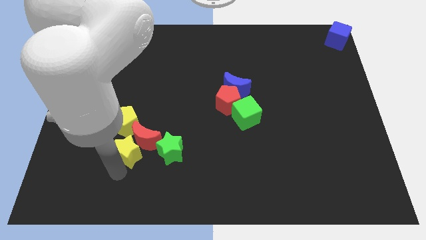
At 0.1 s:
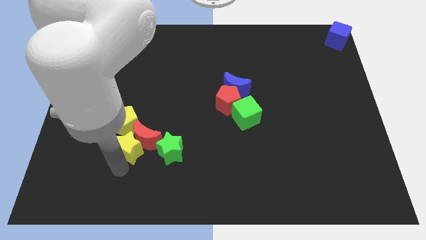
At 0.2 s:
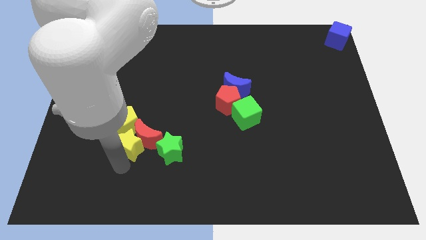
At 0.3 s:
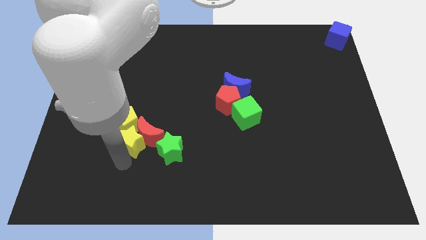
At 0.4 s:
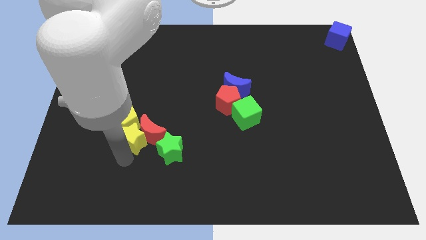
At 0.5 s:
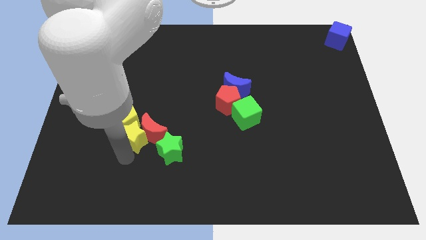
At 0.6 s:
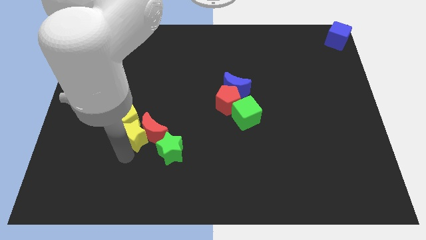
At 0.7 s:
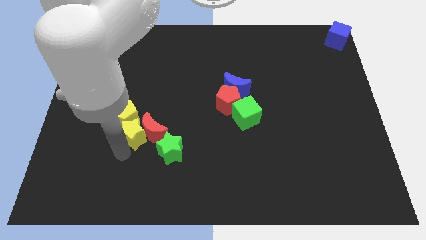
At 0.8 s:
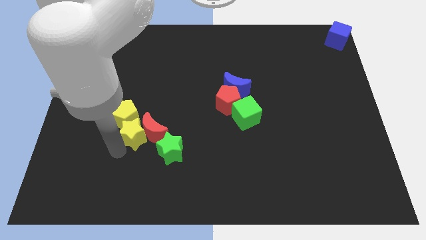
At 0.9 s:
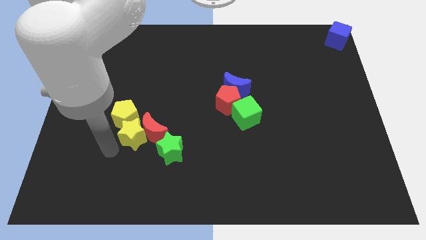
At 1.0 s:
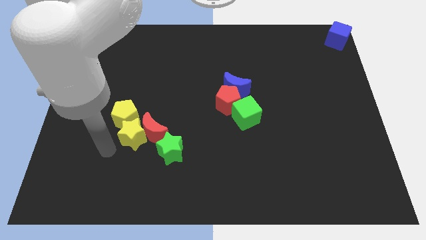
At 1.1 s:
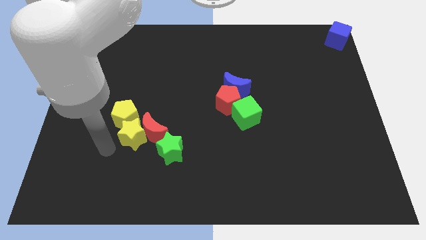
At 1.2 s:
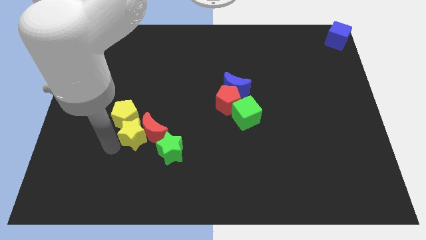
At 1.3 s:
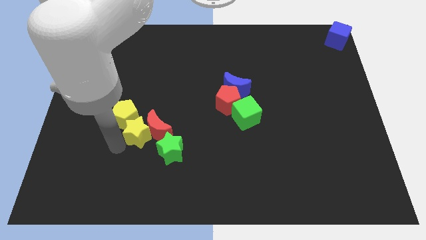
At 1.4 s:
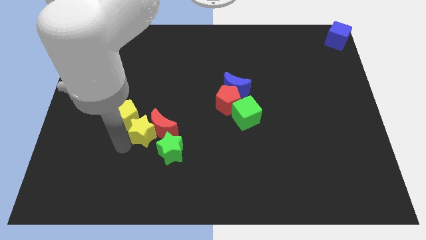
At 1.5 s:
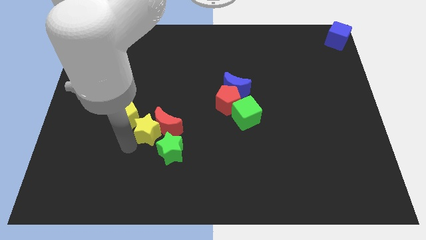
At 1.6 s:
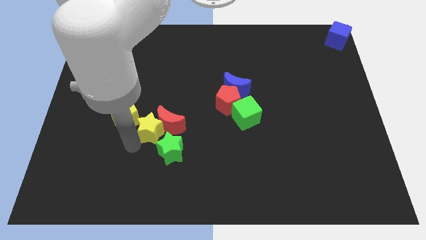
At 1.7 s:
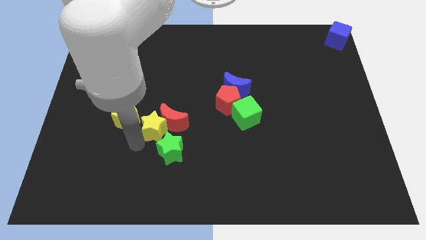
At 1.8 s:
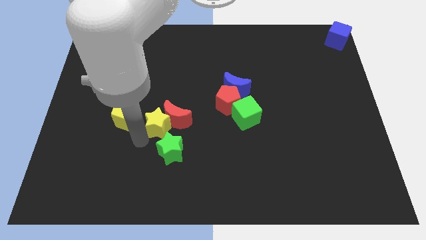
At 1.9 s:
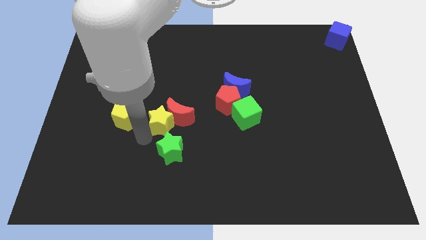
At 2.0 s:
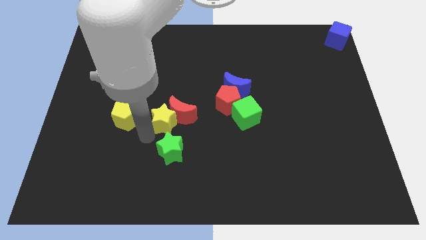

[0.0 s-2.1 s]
slide the yellow star and red moon at the center of the board

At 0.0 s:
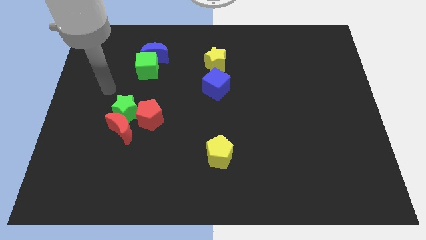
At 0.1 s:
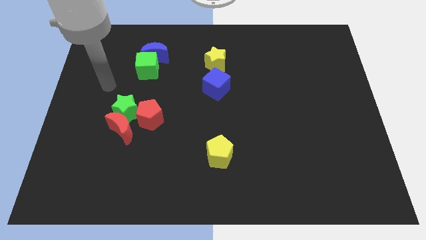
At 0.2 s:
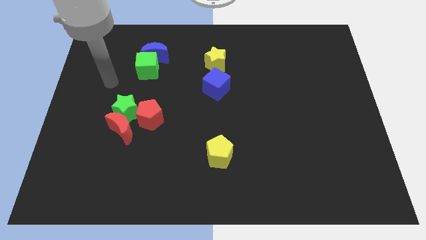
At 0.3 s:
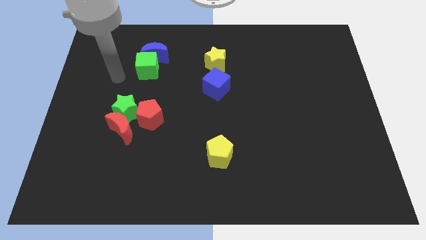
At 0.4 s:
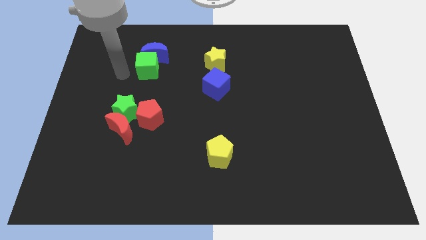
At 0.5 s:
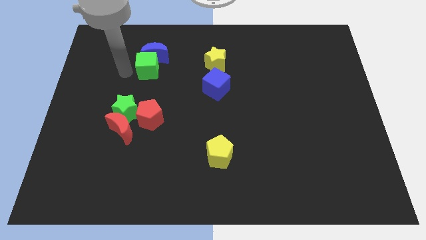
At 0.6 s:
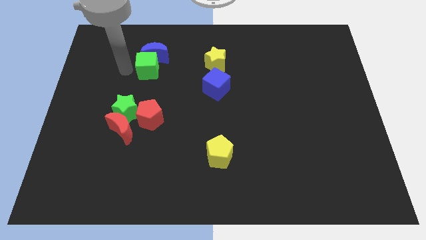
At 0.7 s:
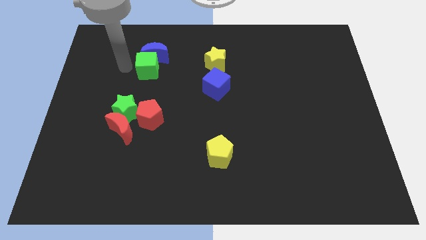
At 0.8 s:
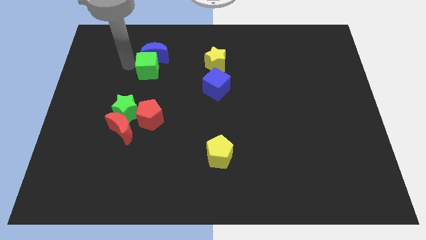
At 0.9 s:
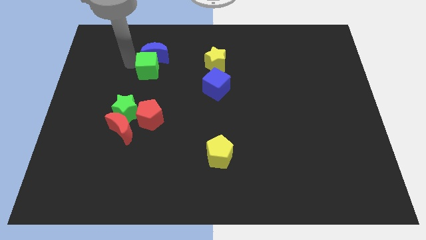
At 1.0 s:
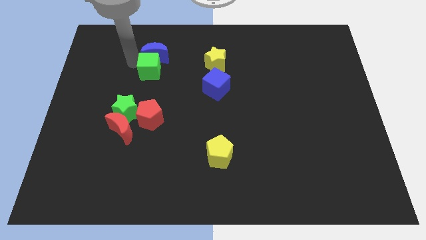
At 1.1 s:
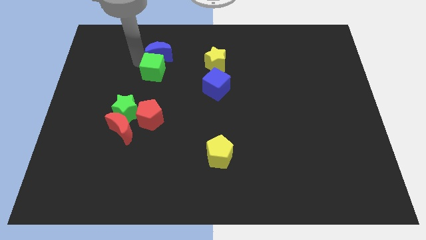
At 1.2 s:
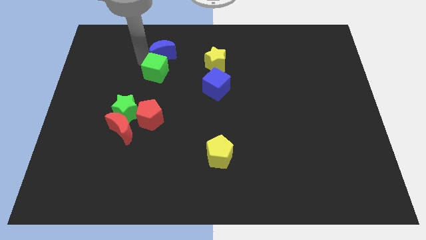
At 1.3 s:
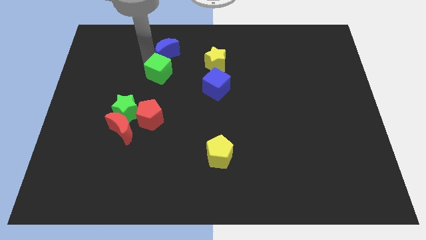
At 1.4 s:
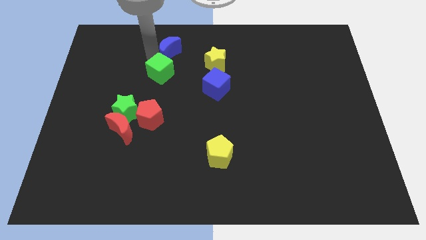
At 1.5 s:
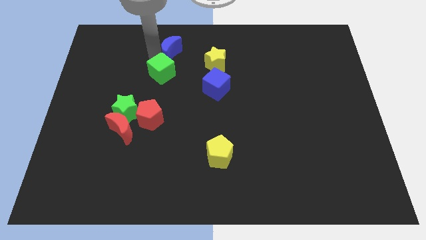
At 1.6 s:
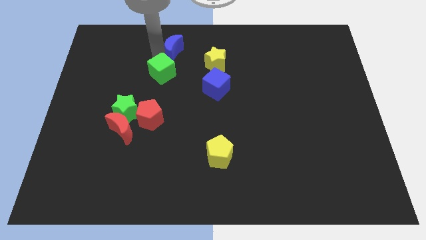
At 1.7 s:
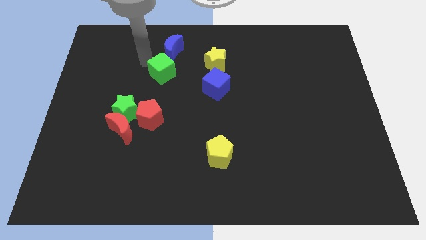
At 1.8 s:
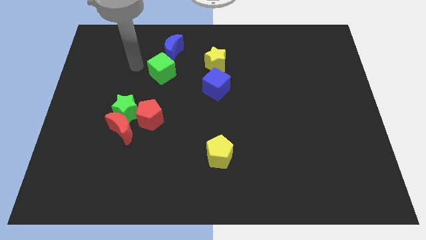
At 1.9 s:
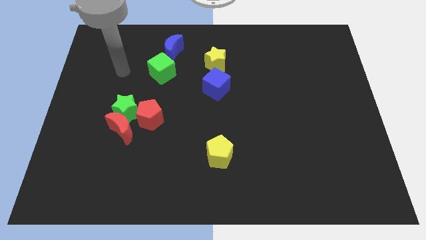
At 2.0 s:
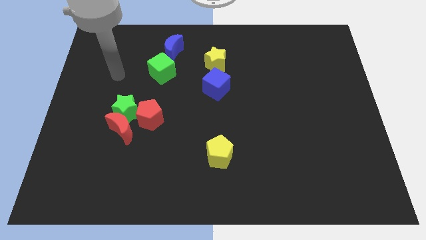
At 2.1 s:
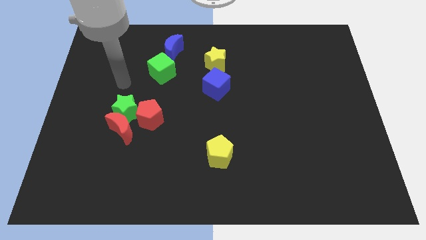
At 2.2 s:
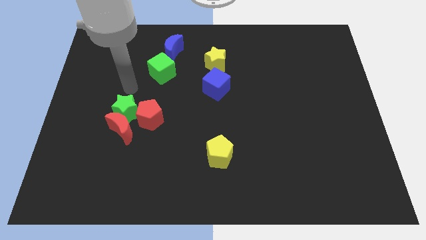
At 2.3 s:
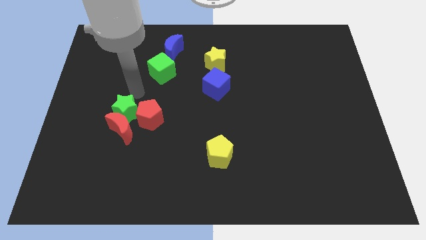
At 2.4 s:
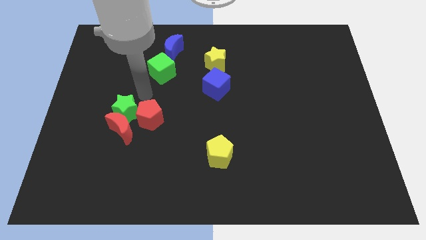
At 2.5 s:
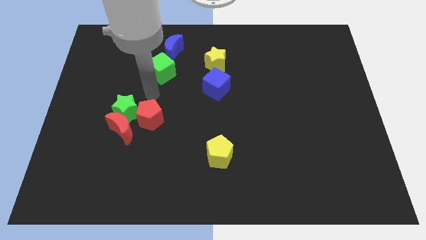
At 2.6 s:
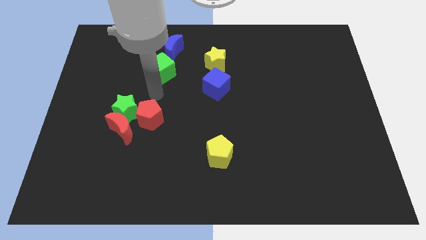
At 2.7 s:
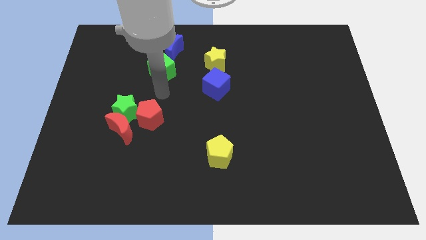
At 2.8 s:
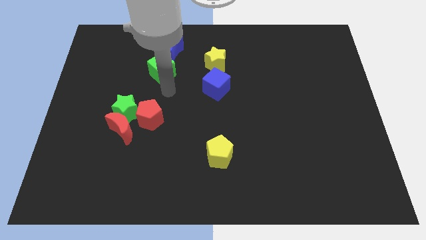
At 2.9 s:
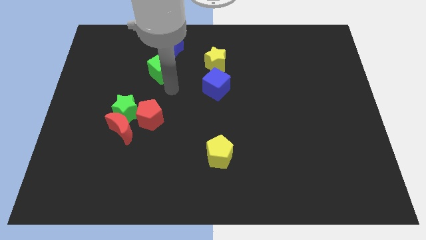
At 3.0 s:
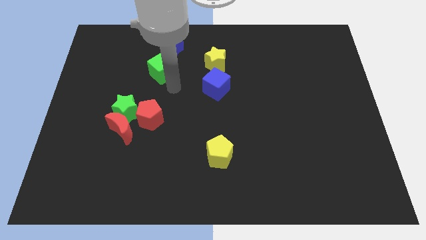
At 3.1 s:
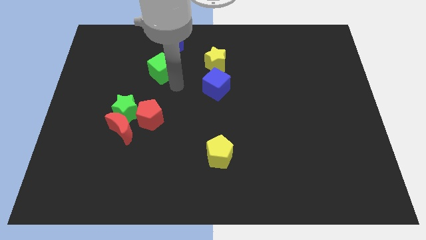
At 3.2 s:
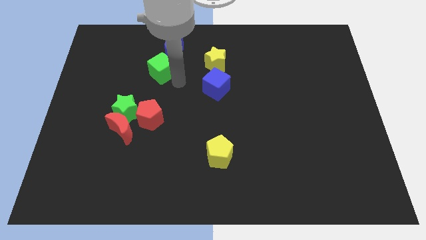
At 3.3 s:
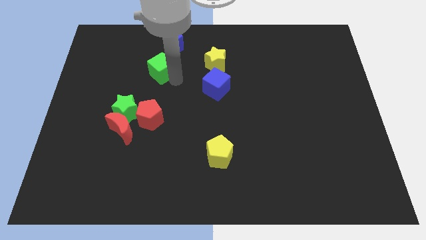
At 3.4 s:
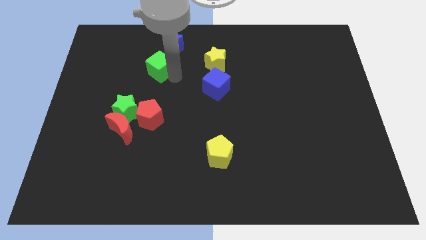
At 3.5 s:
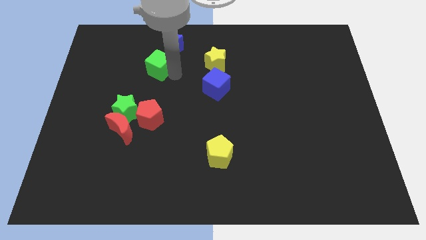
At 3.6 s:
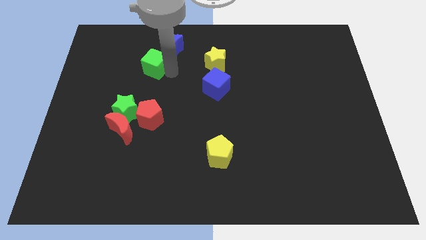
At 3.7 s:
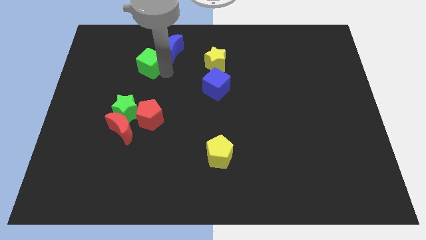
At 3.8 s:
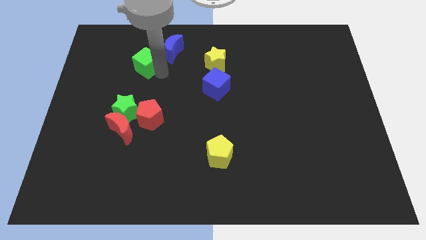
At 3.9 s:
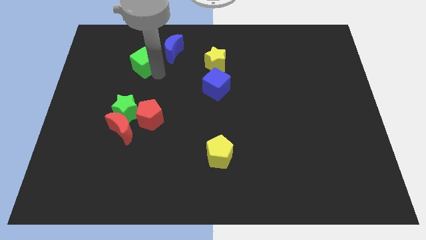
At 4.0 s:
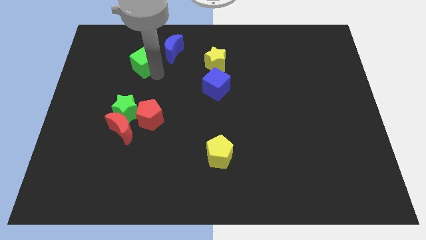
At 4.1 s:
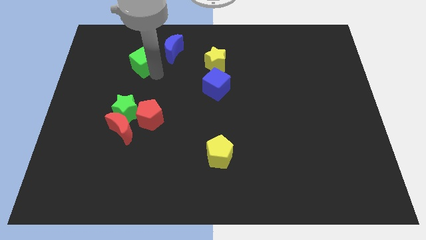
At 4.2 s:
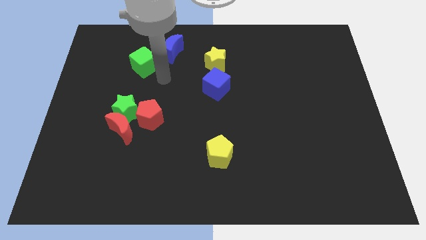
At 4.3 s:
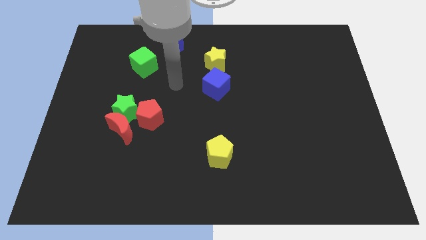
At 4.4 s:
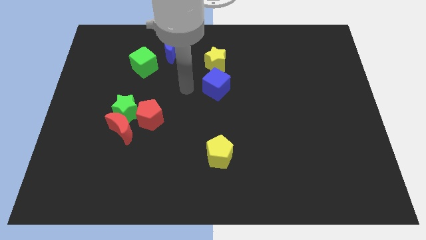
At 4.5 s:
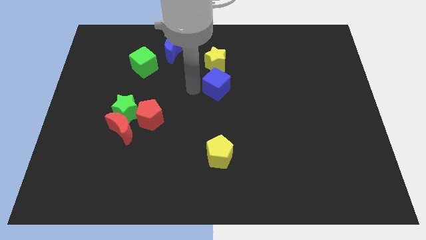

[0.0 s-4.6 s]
separate the green cube and blue crescent

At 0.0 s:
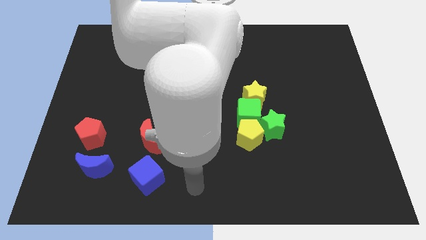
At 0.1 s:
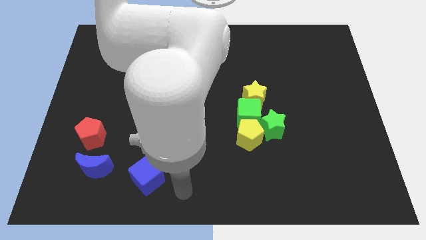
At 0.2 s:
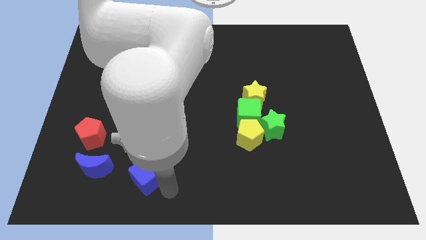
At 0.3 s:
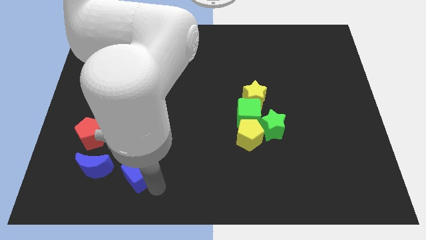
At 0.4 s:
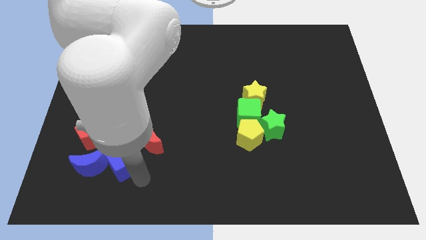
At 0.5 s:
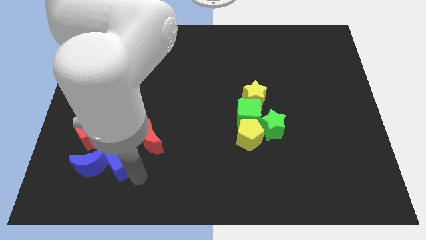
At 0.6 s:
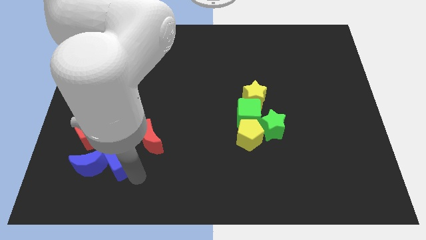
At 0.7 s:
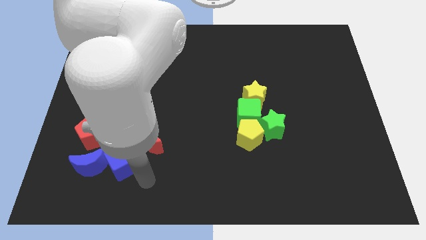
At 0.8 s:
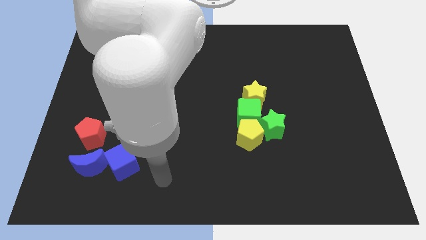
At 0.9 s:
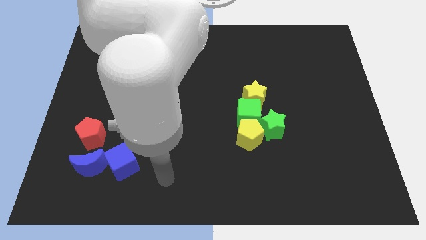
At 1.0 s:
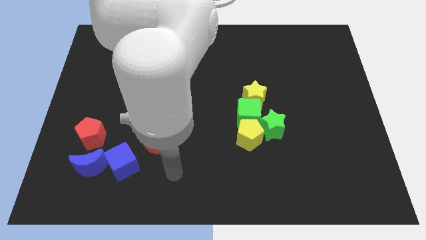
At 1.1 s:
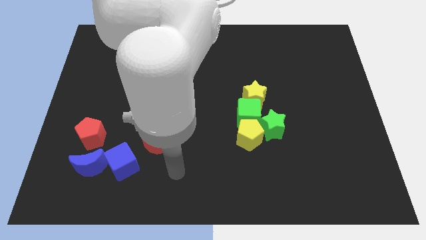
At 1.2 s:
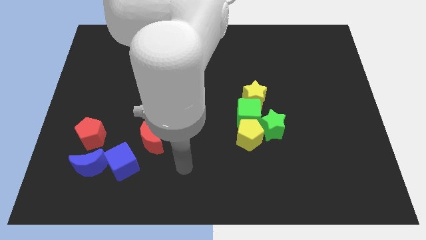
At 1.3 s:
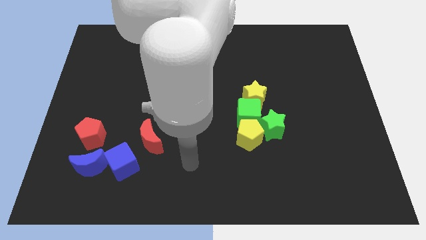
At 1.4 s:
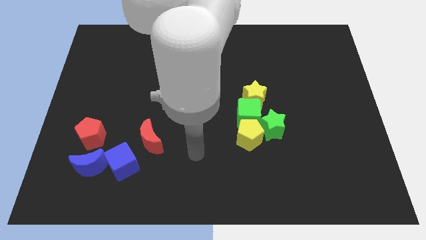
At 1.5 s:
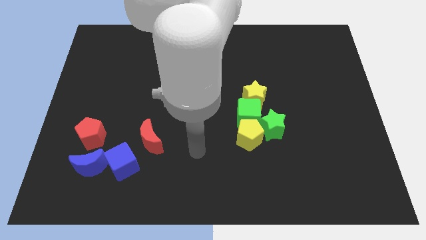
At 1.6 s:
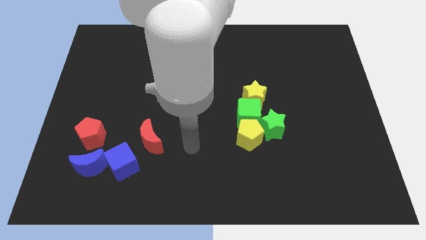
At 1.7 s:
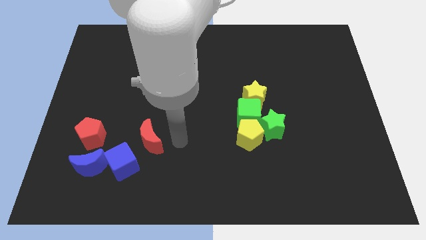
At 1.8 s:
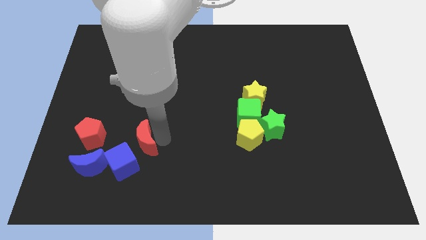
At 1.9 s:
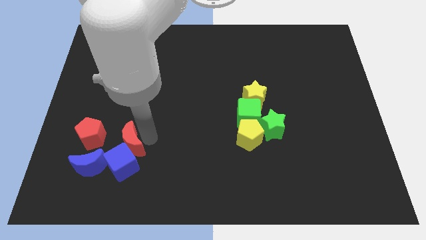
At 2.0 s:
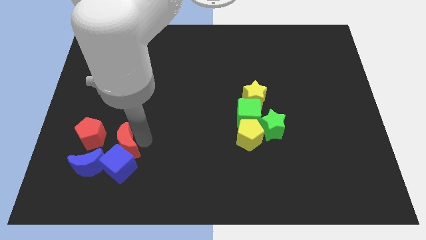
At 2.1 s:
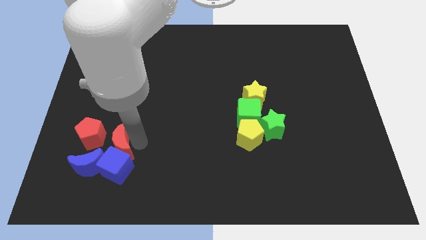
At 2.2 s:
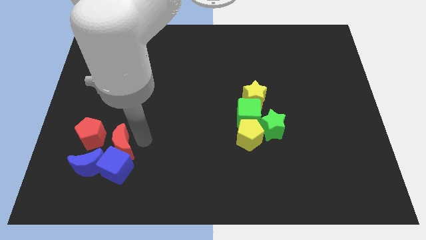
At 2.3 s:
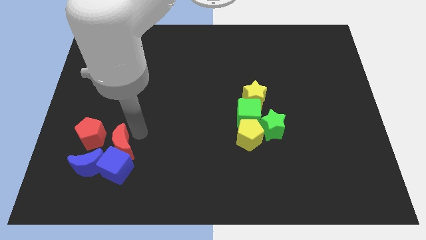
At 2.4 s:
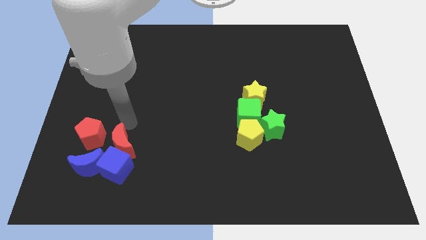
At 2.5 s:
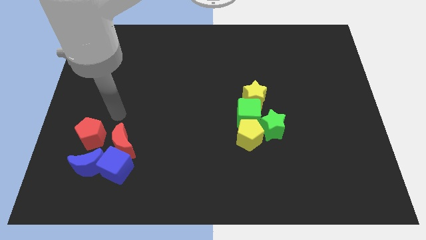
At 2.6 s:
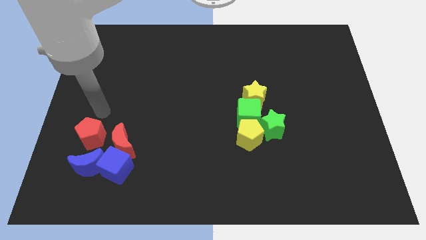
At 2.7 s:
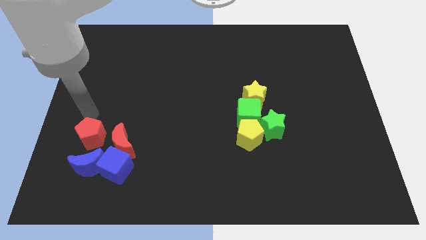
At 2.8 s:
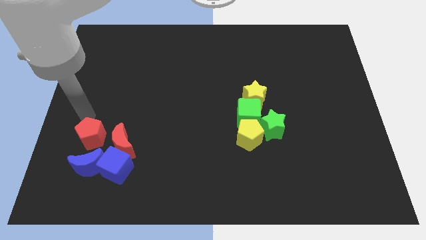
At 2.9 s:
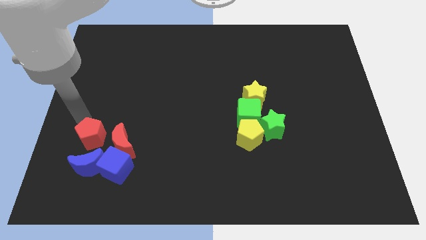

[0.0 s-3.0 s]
attach the red moon to the blue cube
